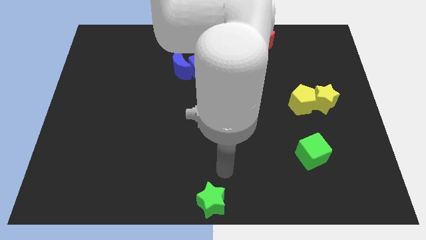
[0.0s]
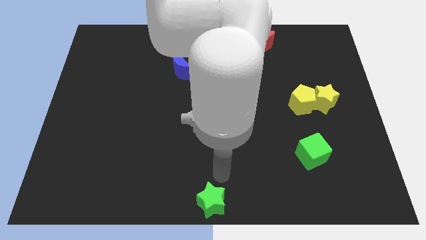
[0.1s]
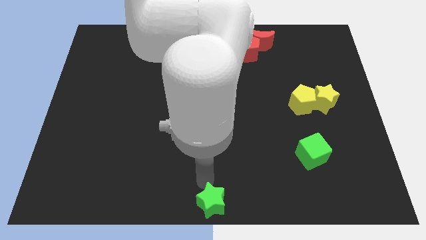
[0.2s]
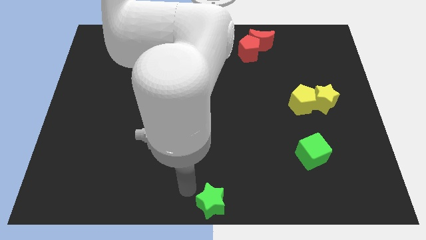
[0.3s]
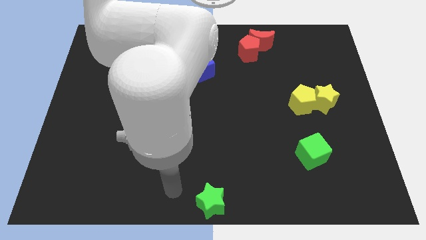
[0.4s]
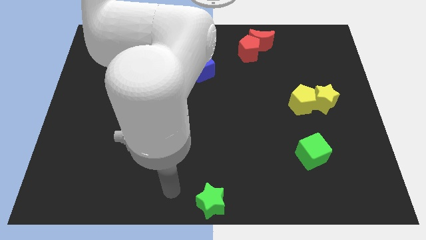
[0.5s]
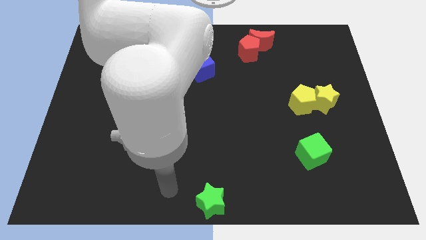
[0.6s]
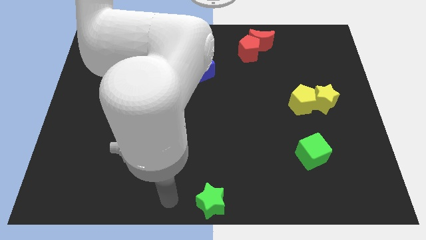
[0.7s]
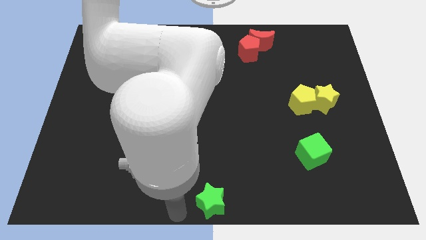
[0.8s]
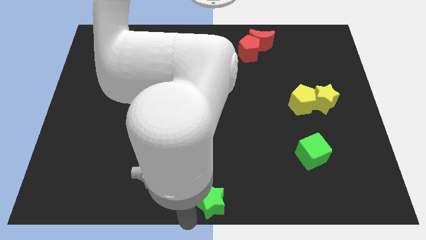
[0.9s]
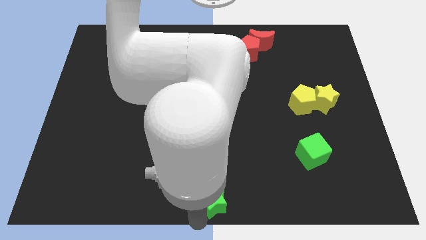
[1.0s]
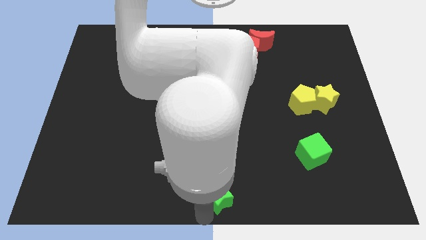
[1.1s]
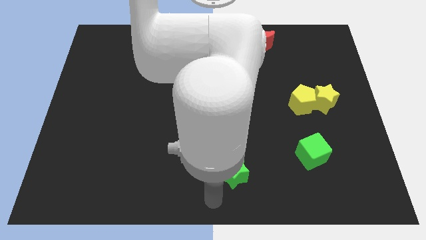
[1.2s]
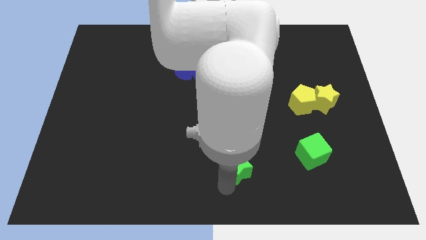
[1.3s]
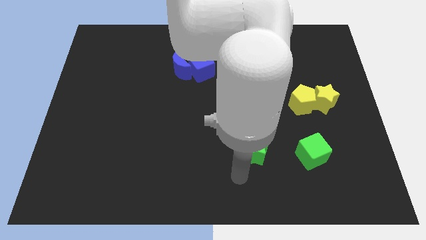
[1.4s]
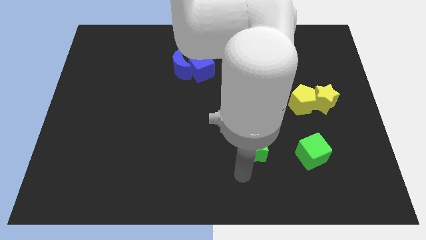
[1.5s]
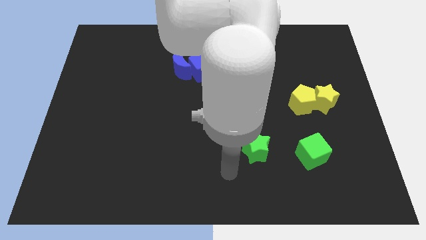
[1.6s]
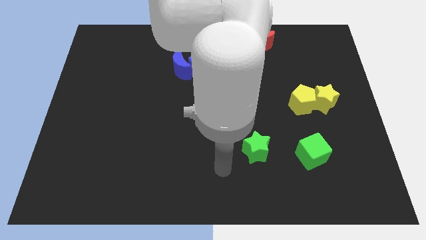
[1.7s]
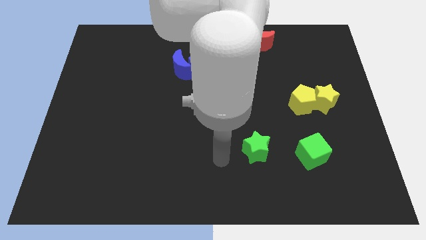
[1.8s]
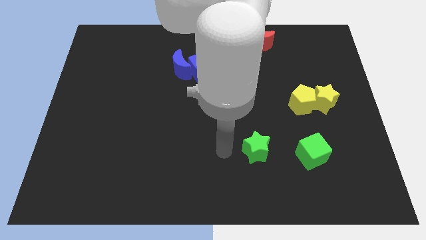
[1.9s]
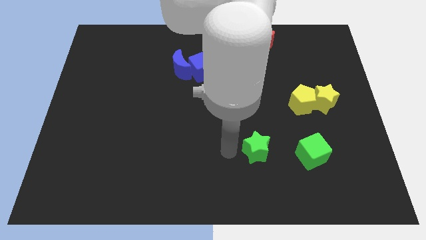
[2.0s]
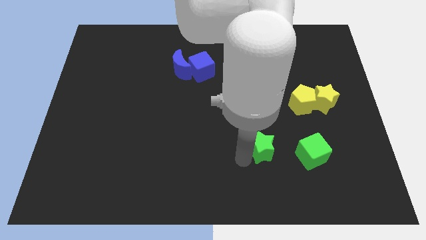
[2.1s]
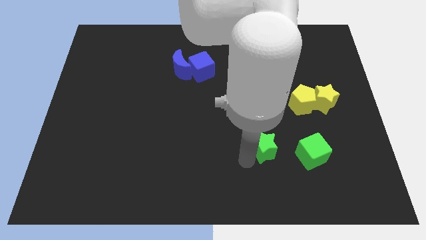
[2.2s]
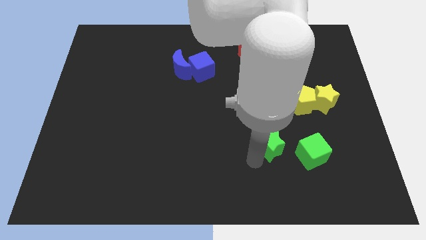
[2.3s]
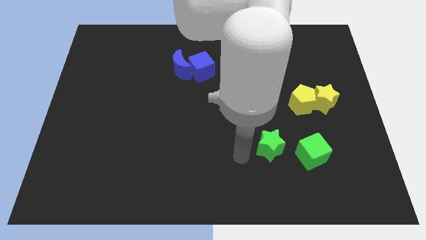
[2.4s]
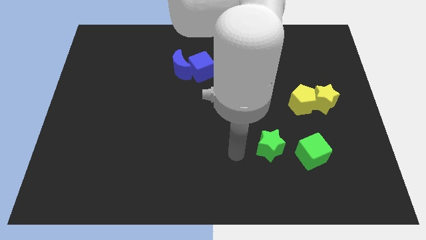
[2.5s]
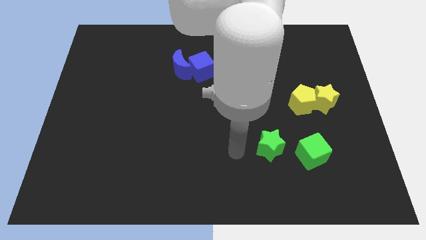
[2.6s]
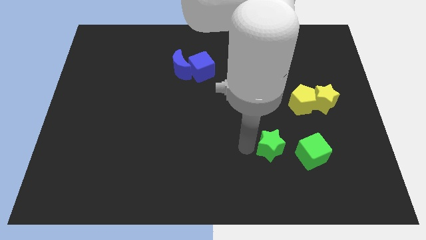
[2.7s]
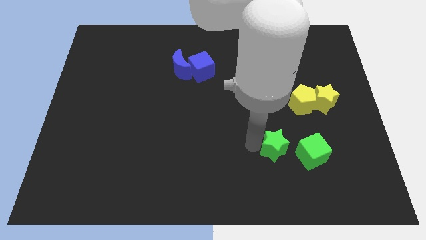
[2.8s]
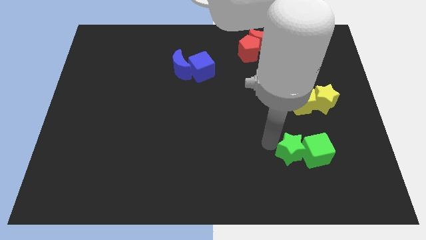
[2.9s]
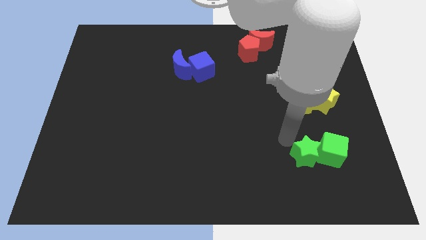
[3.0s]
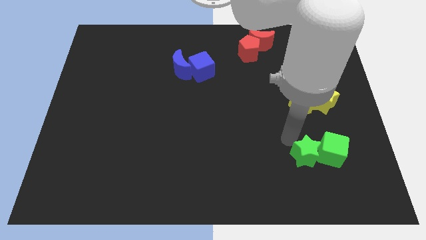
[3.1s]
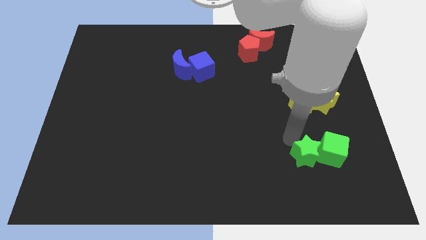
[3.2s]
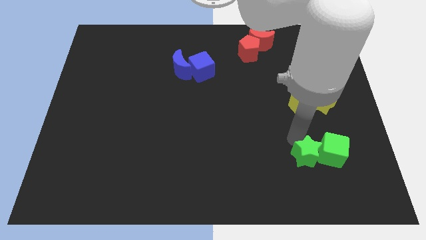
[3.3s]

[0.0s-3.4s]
move the green star into the green cube

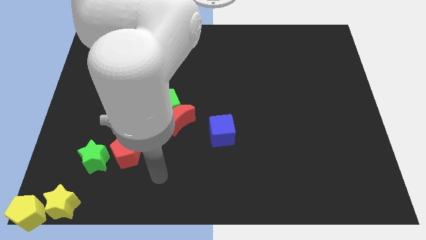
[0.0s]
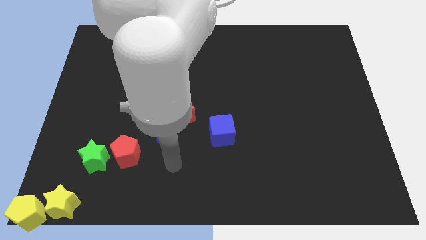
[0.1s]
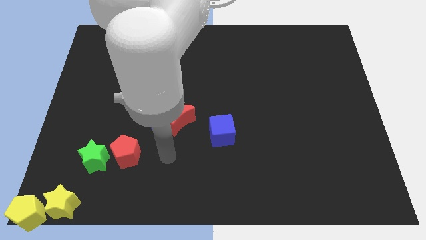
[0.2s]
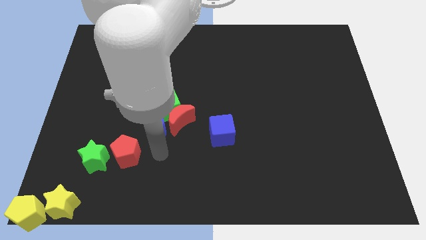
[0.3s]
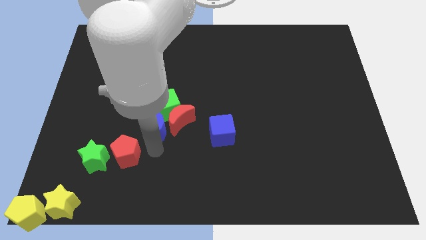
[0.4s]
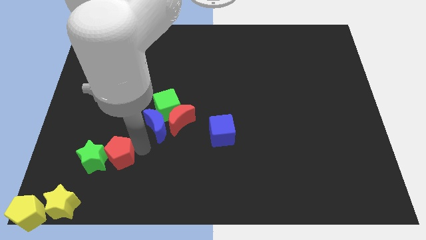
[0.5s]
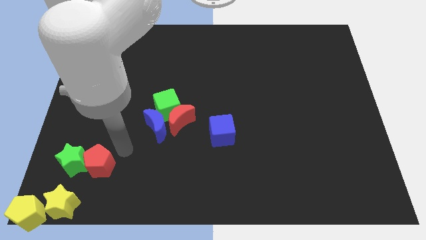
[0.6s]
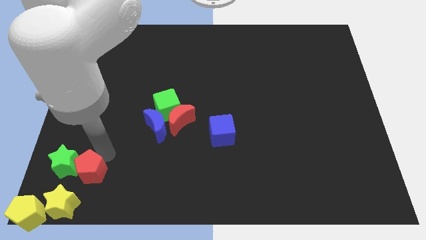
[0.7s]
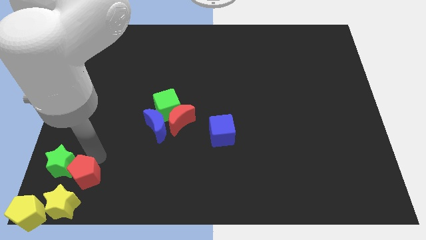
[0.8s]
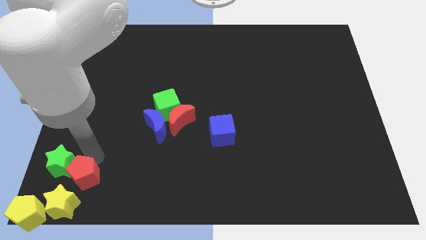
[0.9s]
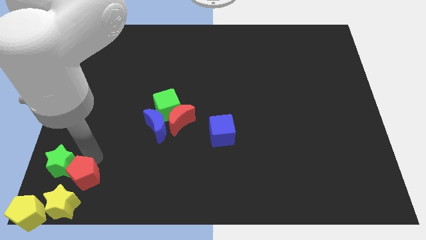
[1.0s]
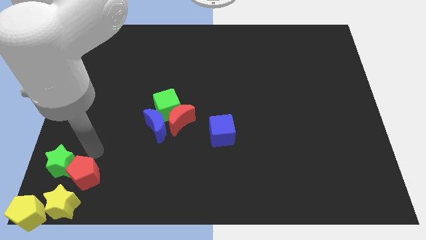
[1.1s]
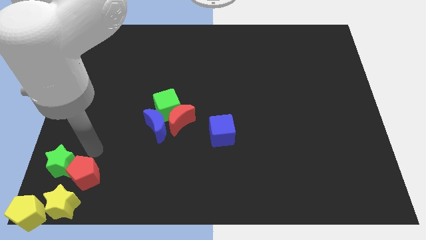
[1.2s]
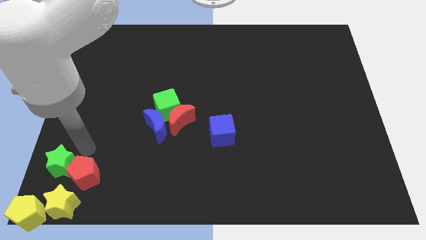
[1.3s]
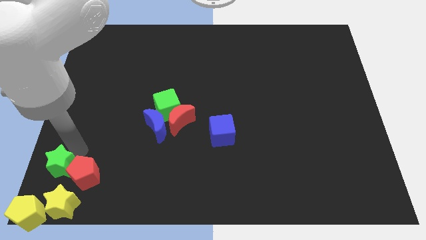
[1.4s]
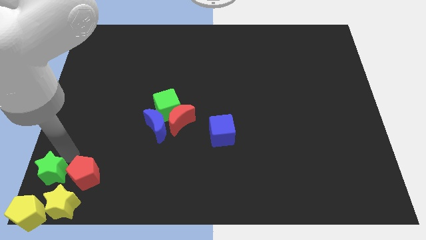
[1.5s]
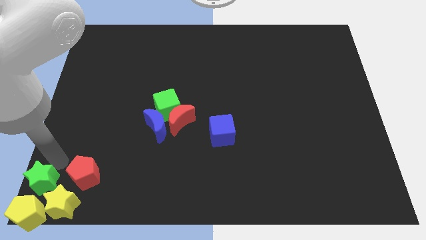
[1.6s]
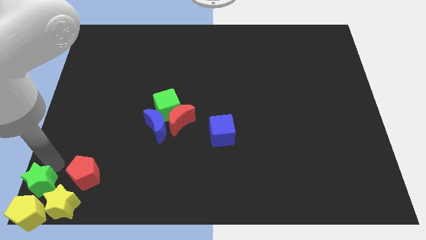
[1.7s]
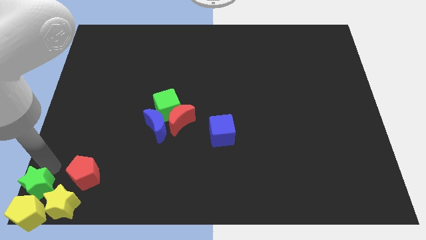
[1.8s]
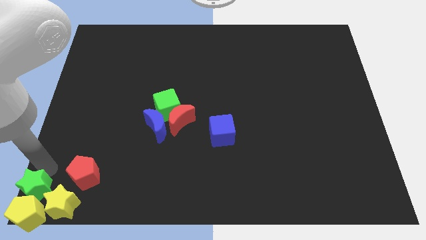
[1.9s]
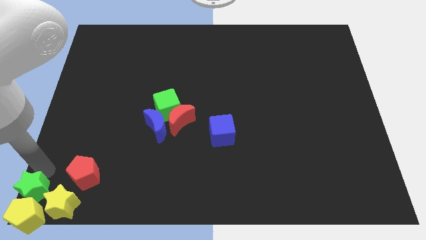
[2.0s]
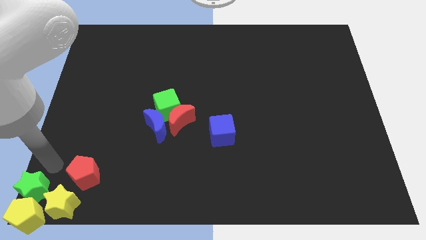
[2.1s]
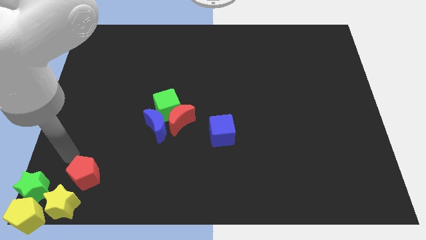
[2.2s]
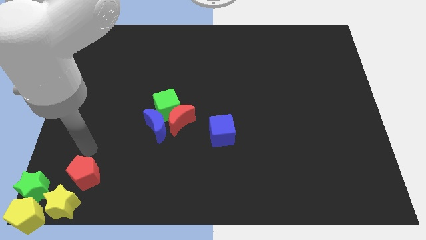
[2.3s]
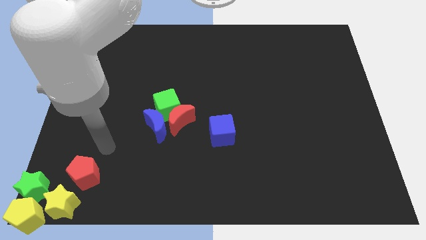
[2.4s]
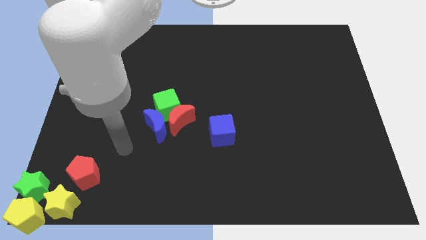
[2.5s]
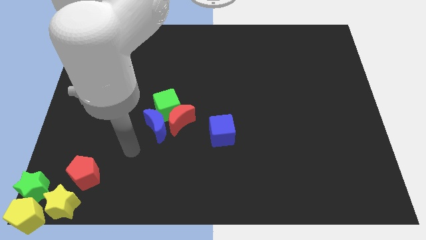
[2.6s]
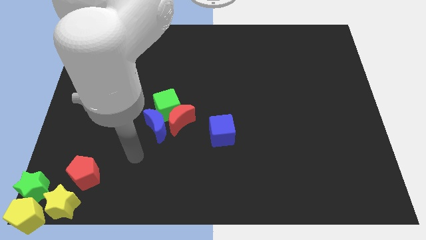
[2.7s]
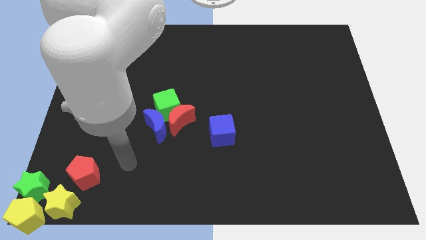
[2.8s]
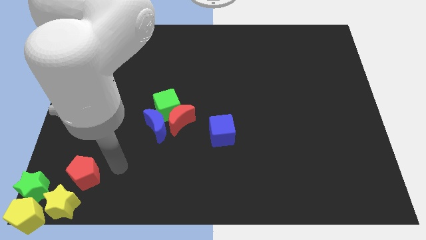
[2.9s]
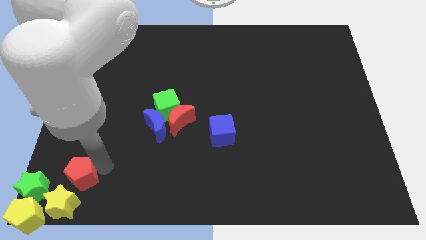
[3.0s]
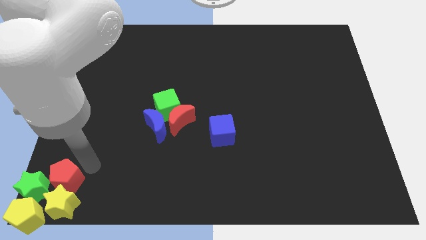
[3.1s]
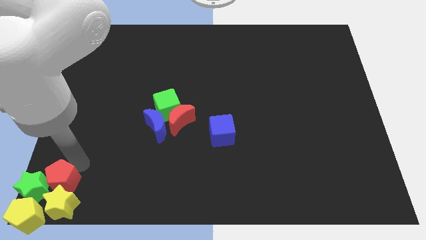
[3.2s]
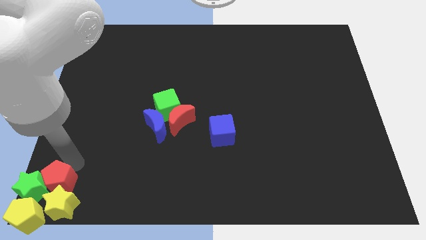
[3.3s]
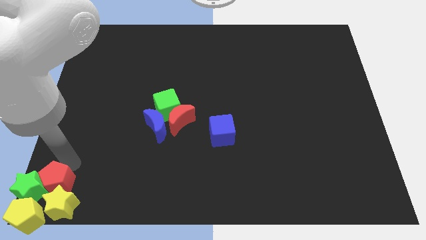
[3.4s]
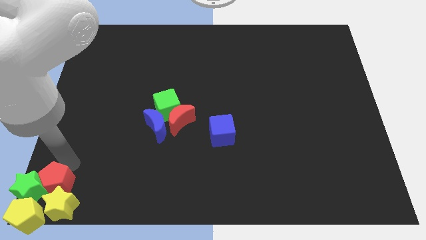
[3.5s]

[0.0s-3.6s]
slide the green star and red pentagon to bottom left corner

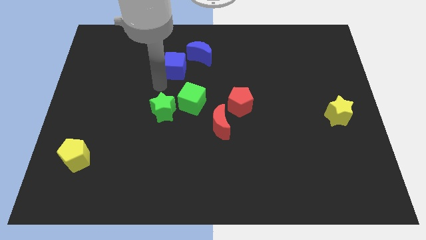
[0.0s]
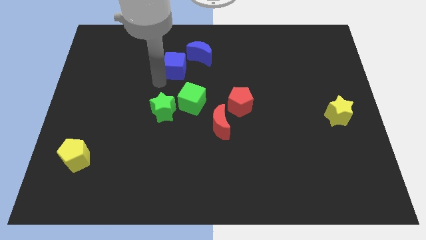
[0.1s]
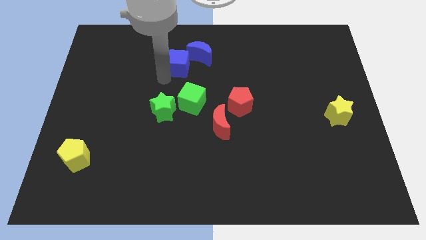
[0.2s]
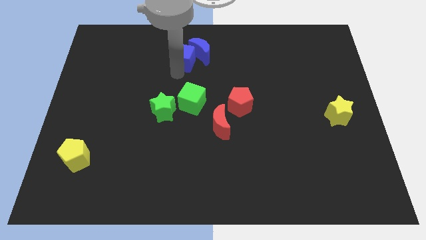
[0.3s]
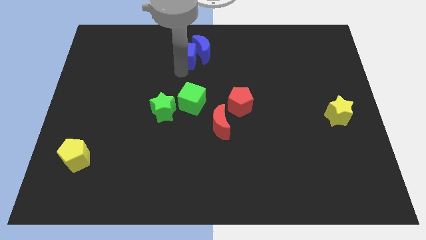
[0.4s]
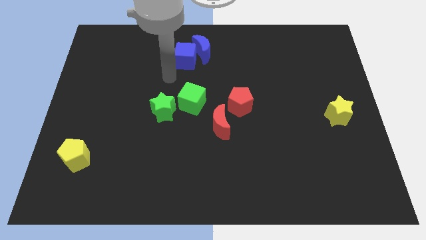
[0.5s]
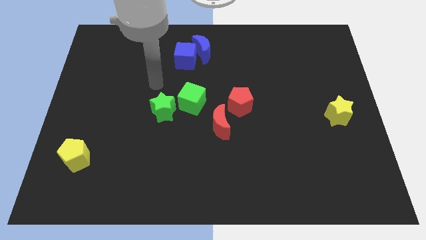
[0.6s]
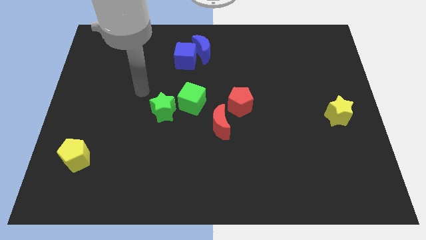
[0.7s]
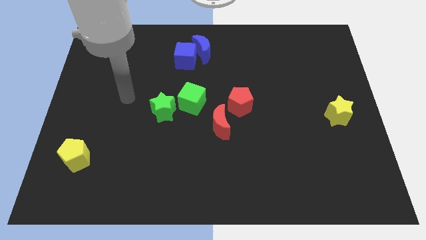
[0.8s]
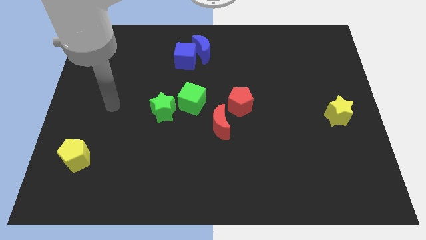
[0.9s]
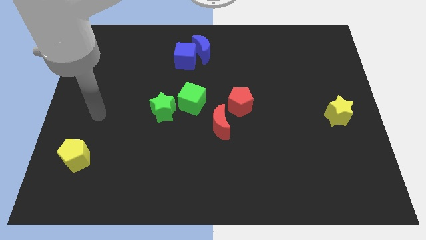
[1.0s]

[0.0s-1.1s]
push blue cube into blue crescent

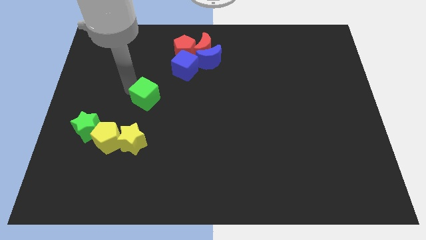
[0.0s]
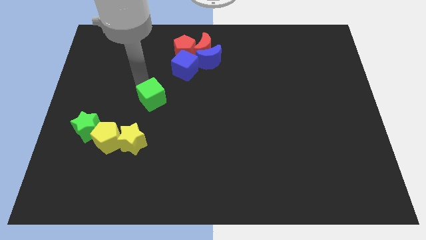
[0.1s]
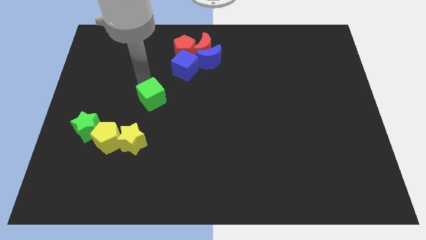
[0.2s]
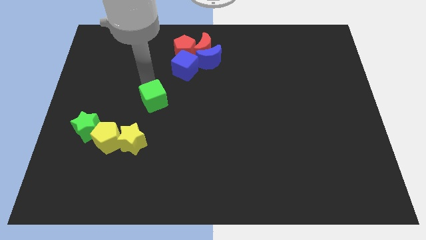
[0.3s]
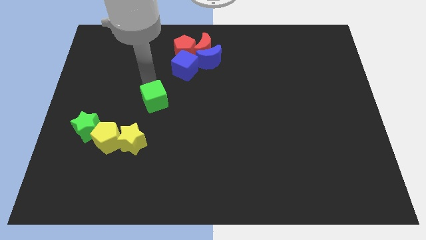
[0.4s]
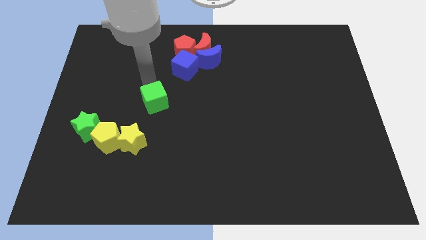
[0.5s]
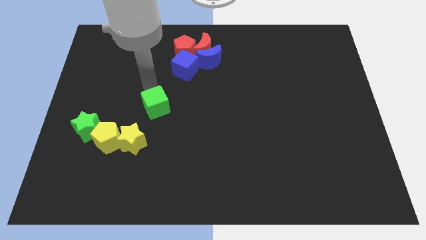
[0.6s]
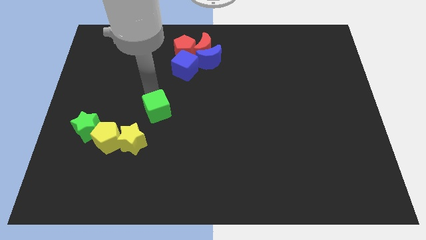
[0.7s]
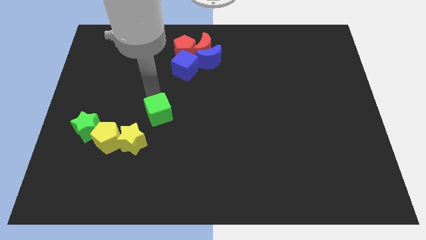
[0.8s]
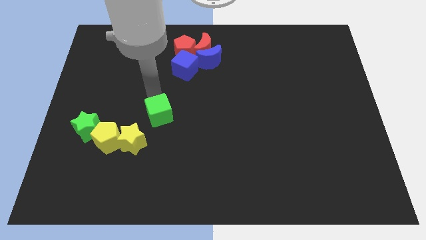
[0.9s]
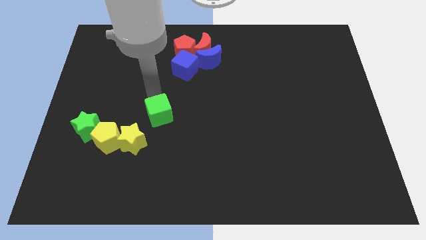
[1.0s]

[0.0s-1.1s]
move the green cube towards the line of blocks
